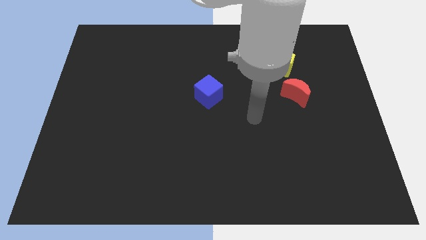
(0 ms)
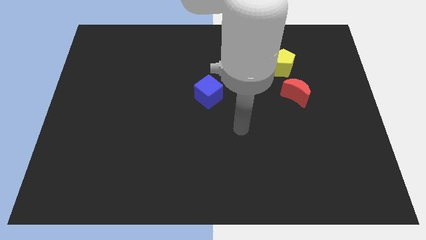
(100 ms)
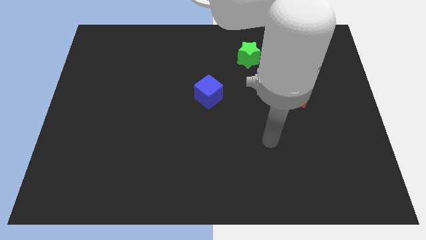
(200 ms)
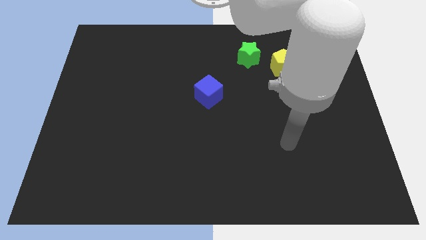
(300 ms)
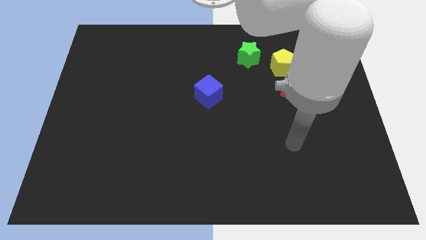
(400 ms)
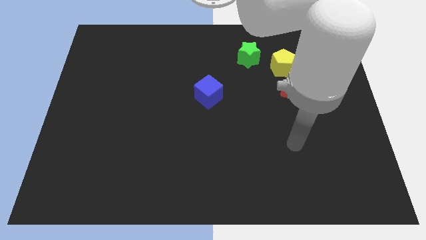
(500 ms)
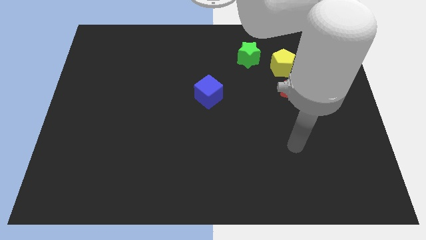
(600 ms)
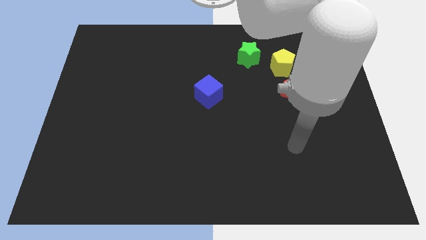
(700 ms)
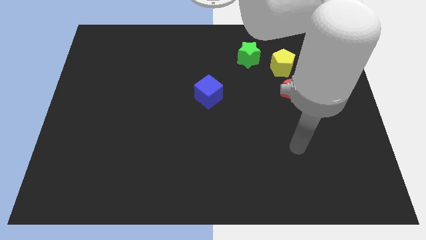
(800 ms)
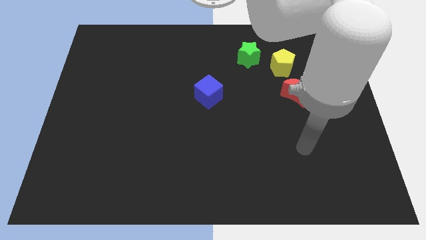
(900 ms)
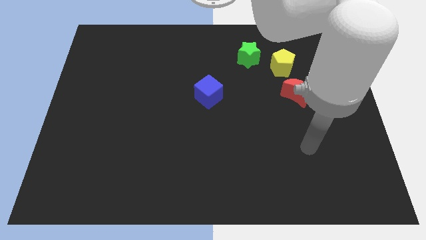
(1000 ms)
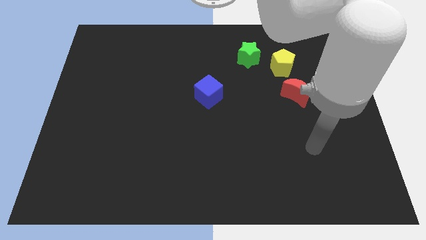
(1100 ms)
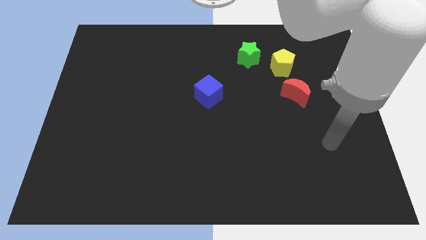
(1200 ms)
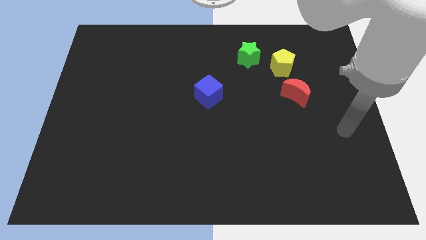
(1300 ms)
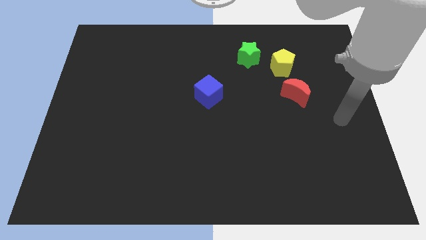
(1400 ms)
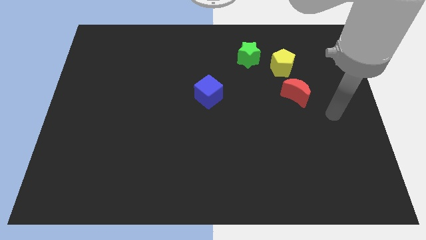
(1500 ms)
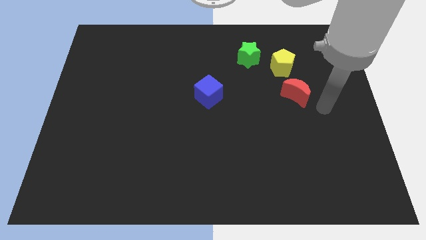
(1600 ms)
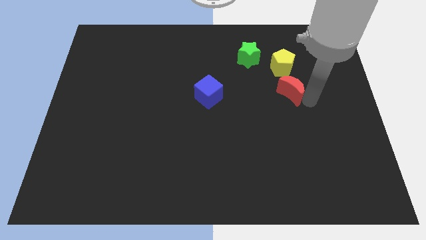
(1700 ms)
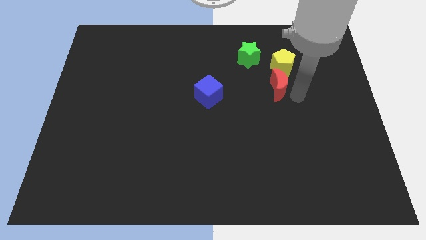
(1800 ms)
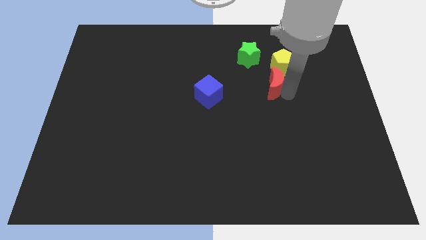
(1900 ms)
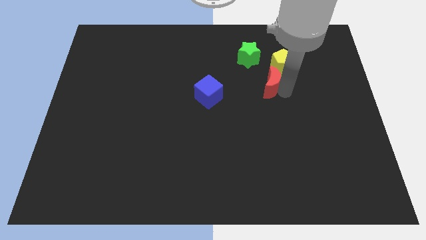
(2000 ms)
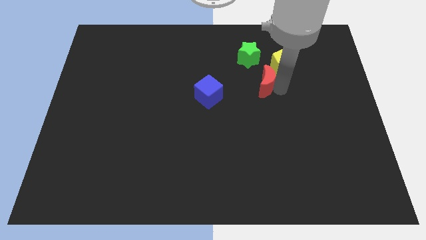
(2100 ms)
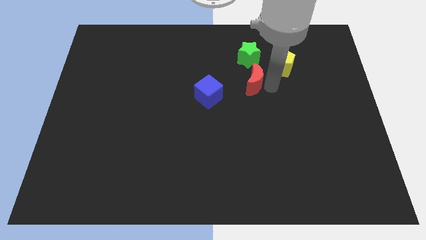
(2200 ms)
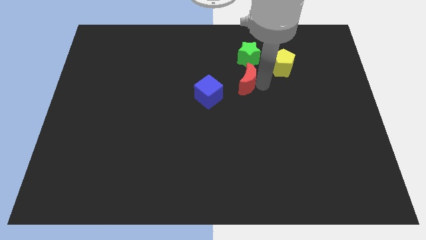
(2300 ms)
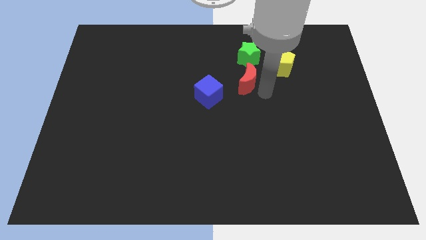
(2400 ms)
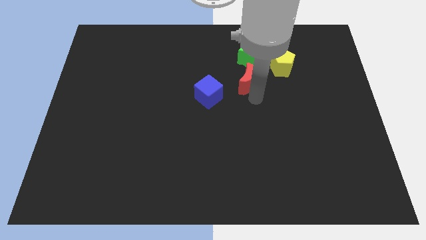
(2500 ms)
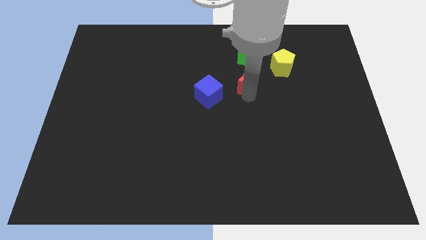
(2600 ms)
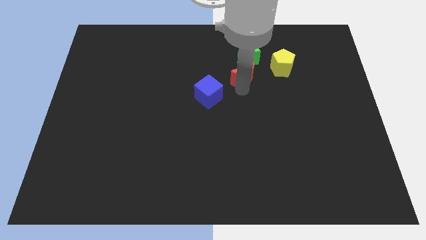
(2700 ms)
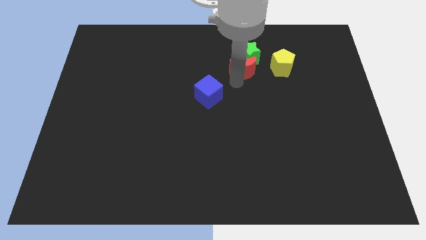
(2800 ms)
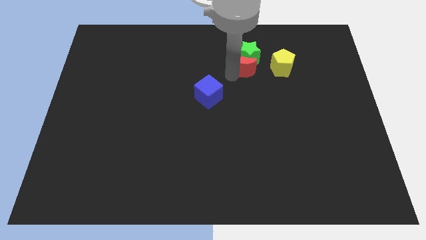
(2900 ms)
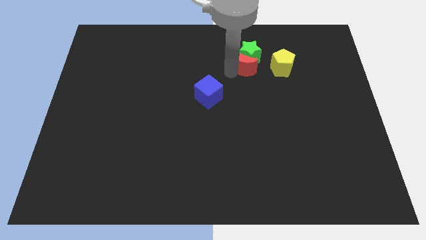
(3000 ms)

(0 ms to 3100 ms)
slide the red moon towards the green star

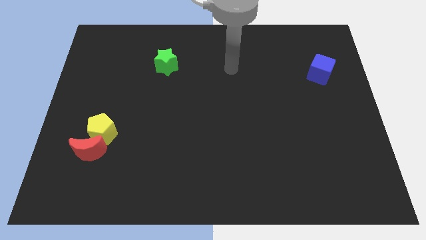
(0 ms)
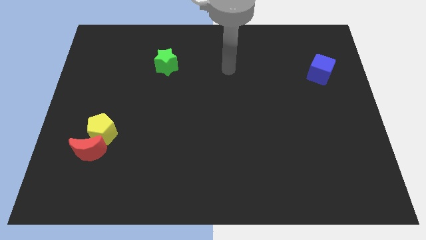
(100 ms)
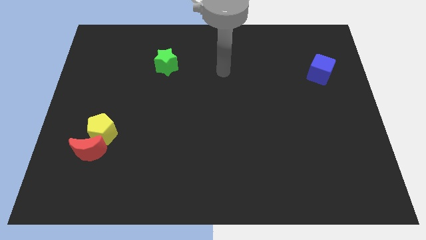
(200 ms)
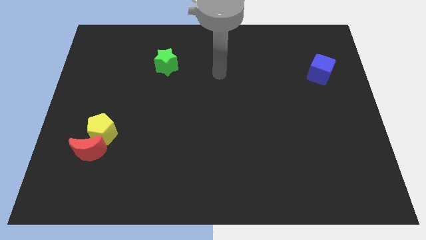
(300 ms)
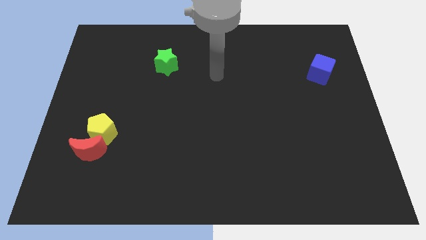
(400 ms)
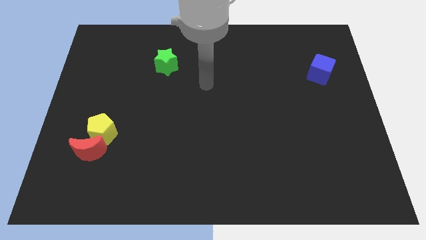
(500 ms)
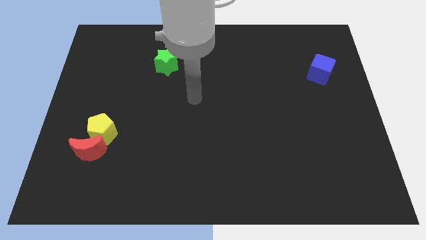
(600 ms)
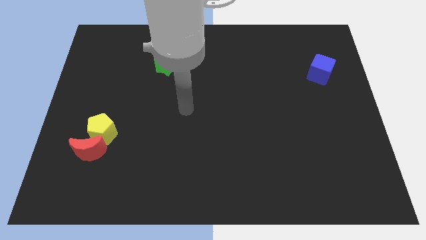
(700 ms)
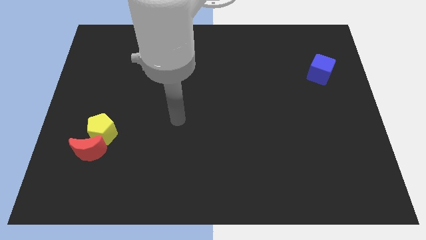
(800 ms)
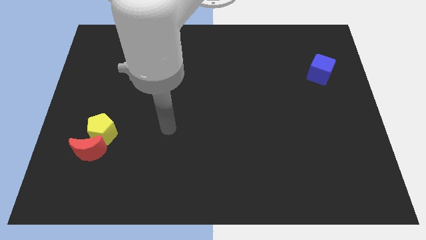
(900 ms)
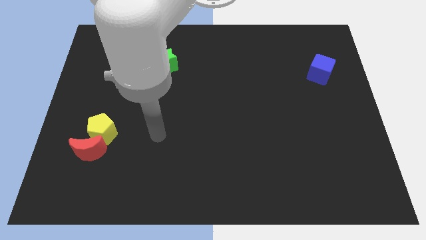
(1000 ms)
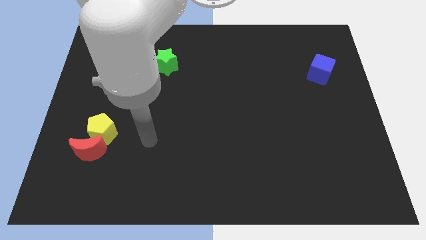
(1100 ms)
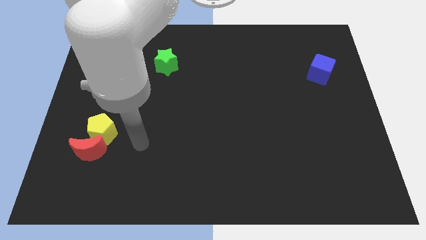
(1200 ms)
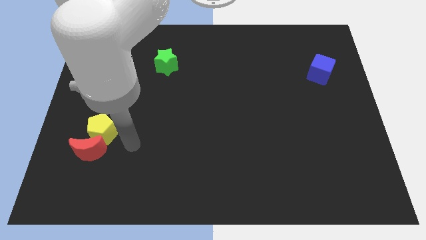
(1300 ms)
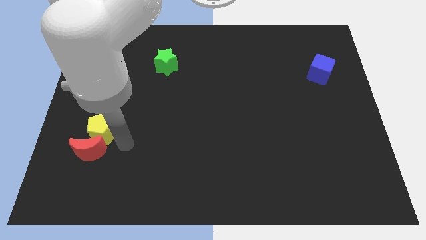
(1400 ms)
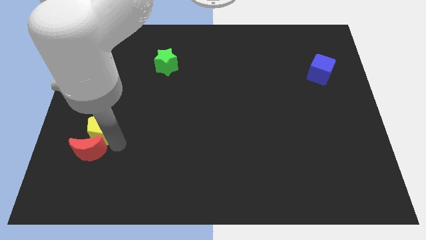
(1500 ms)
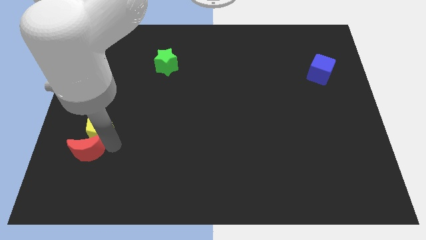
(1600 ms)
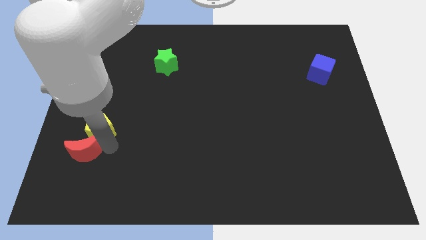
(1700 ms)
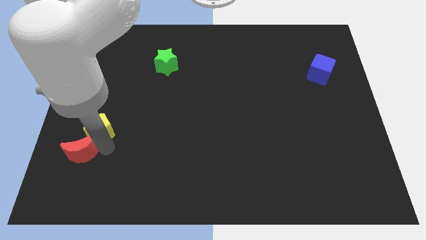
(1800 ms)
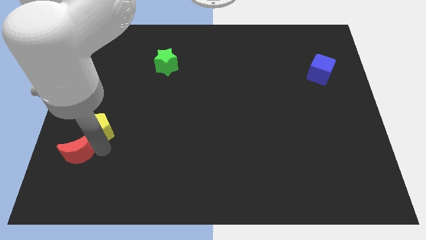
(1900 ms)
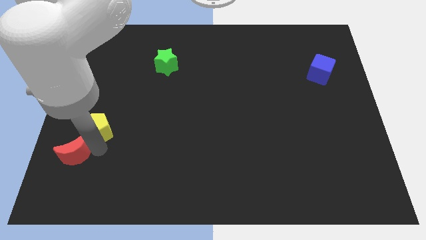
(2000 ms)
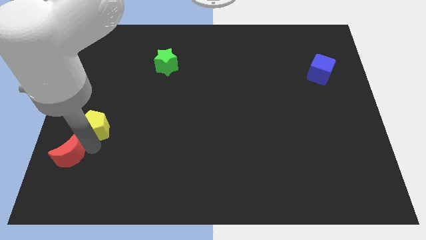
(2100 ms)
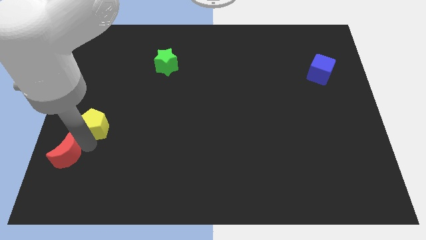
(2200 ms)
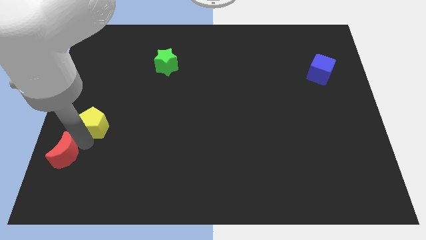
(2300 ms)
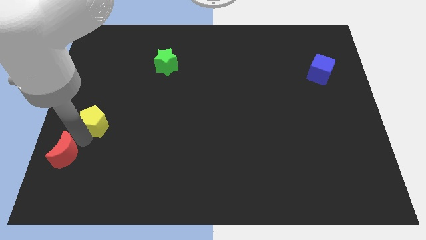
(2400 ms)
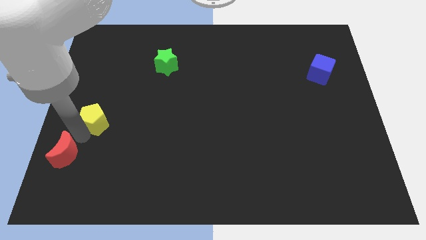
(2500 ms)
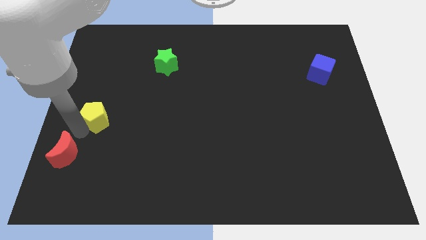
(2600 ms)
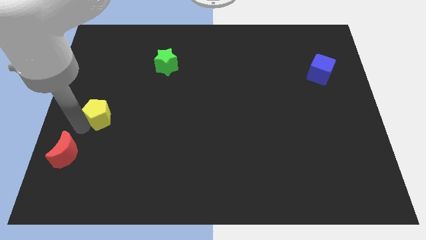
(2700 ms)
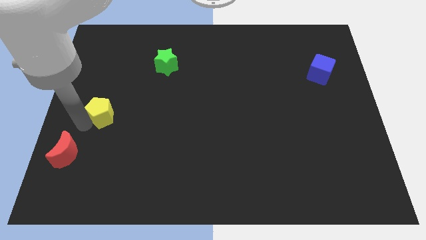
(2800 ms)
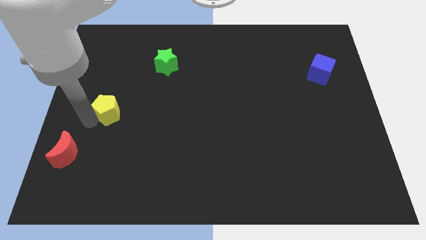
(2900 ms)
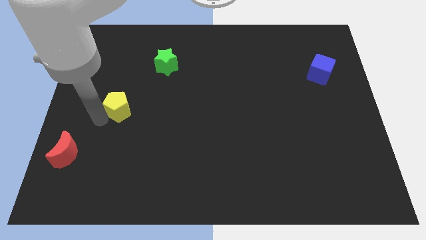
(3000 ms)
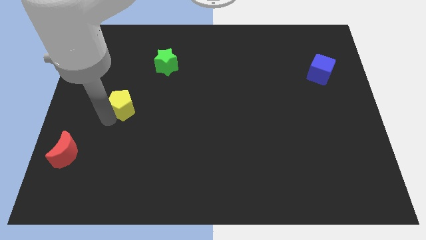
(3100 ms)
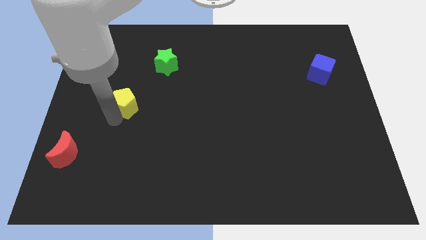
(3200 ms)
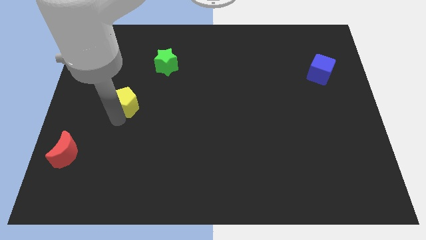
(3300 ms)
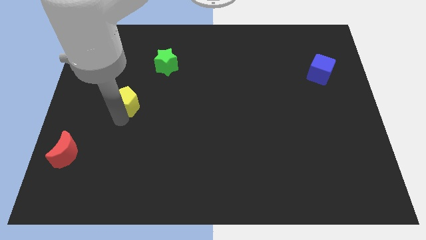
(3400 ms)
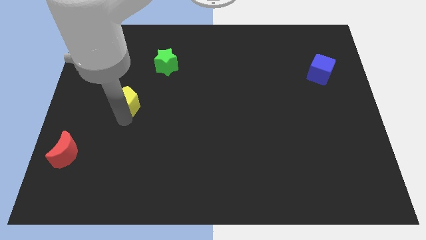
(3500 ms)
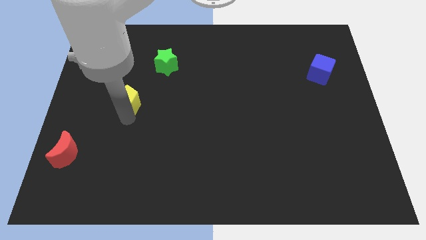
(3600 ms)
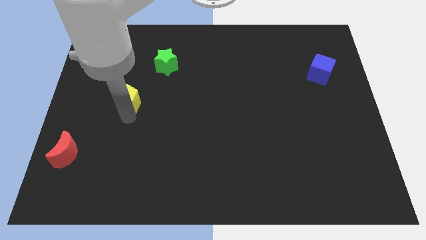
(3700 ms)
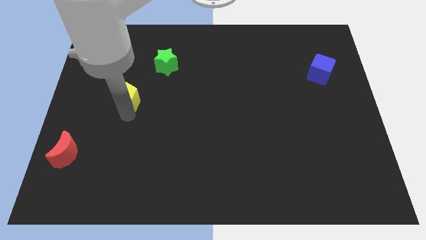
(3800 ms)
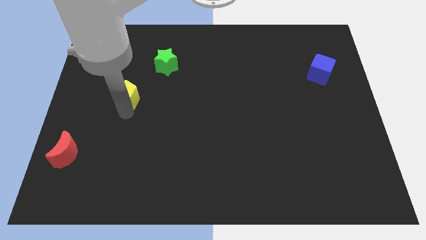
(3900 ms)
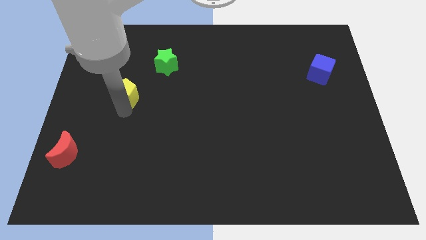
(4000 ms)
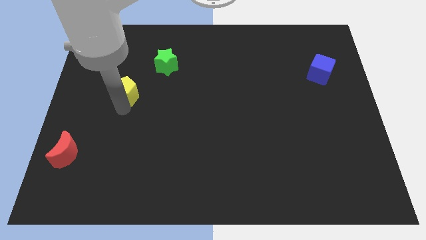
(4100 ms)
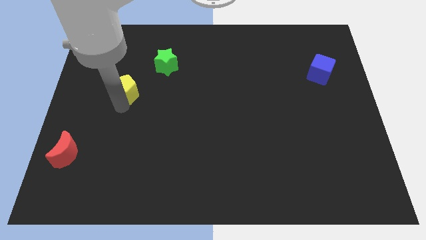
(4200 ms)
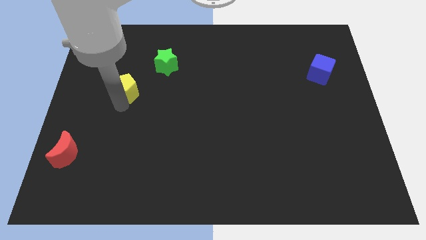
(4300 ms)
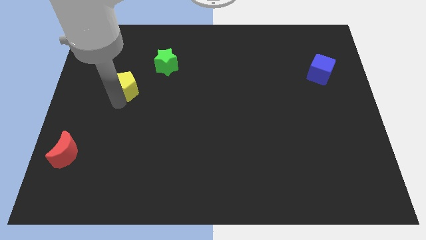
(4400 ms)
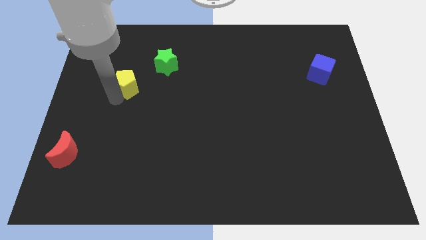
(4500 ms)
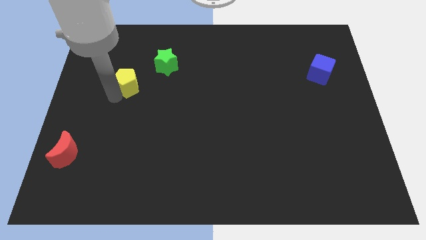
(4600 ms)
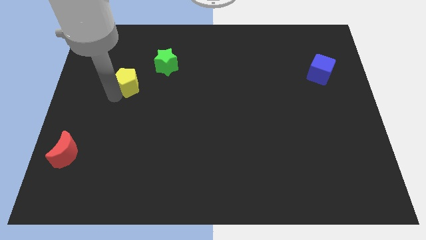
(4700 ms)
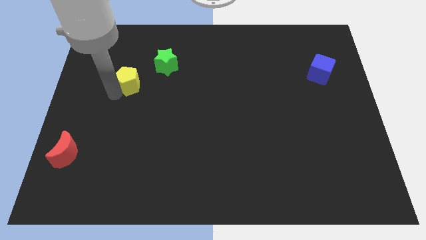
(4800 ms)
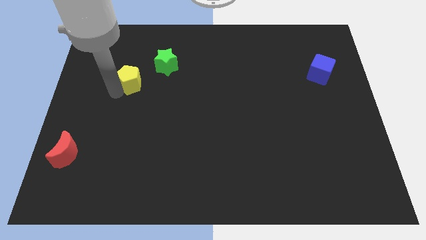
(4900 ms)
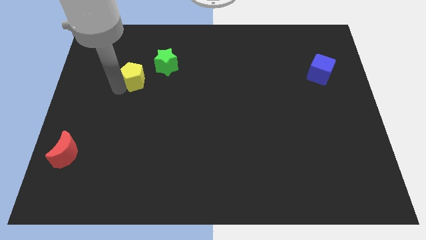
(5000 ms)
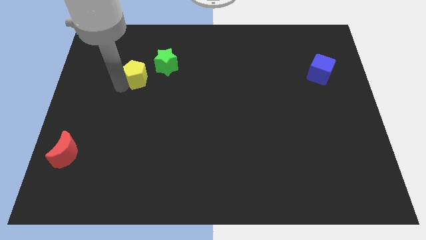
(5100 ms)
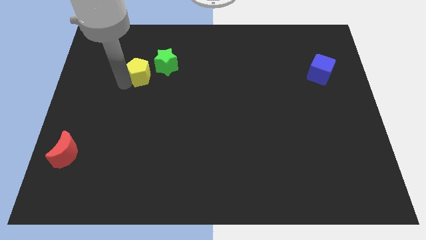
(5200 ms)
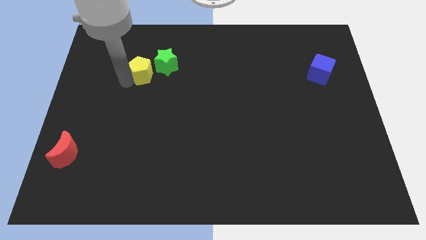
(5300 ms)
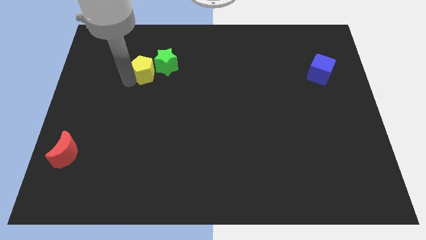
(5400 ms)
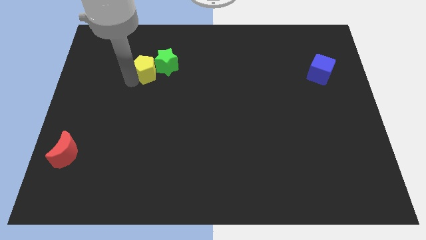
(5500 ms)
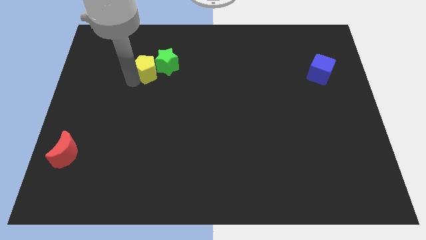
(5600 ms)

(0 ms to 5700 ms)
push the pentagon towards the green block
